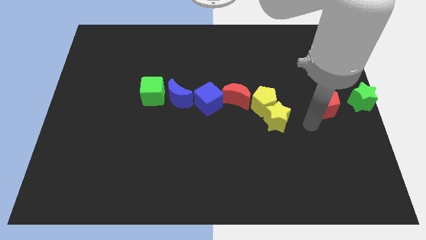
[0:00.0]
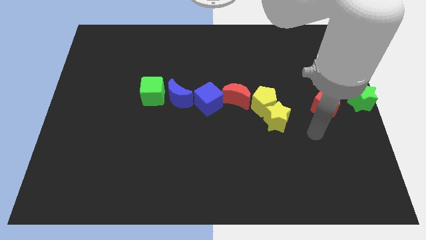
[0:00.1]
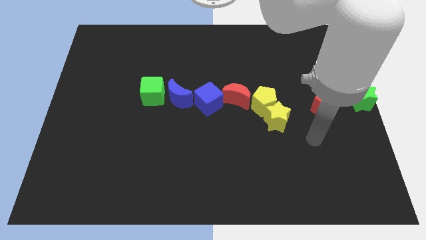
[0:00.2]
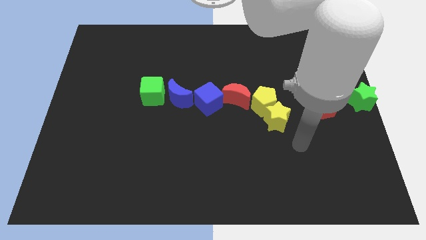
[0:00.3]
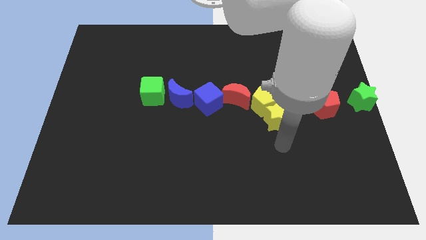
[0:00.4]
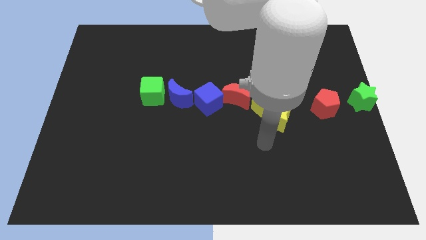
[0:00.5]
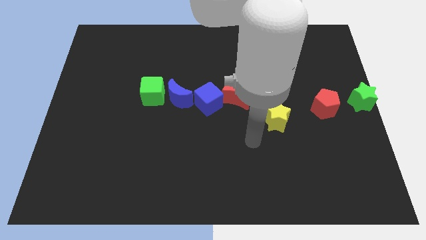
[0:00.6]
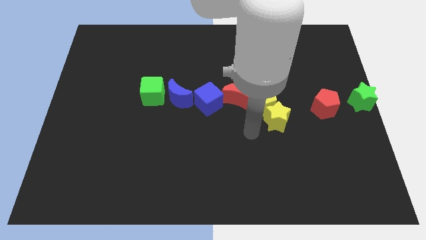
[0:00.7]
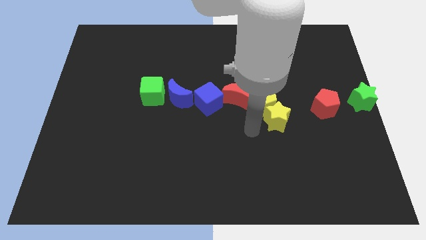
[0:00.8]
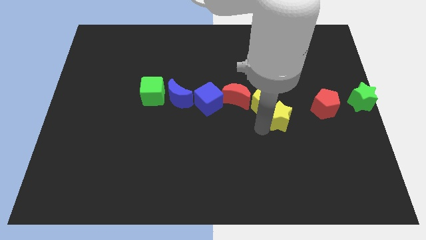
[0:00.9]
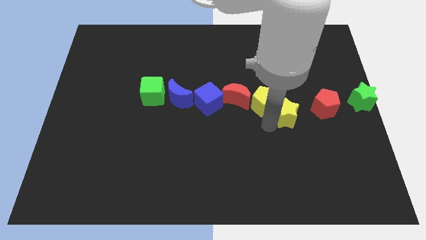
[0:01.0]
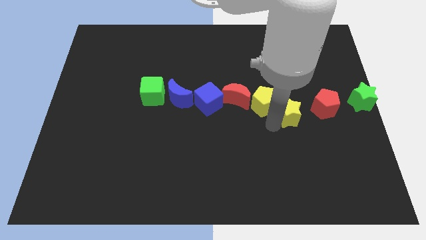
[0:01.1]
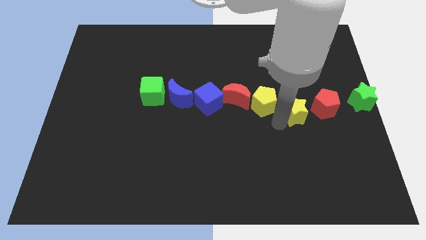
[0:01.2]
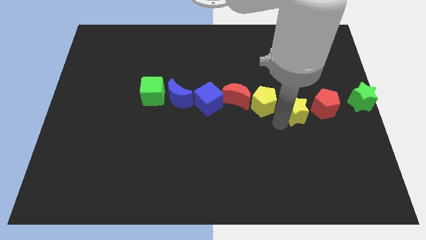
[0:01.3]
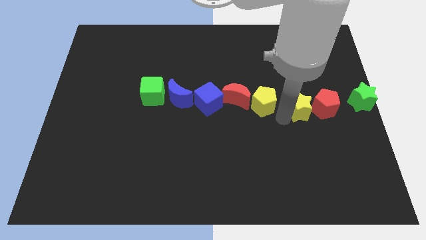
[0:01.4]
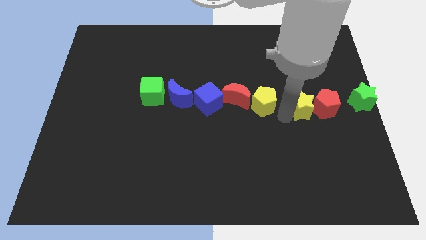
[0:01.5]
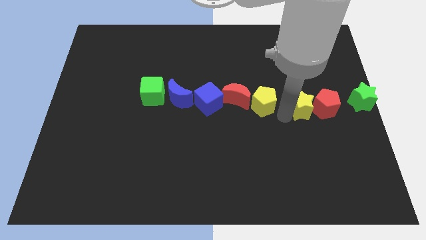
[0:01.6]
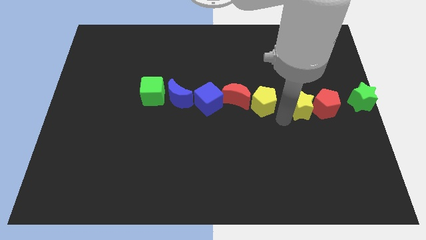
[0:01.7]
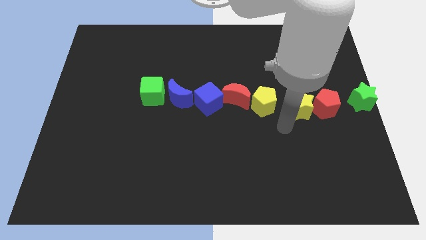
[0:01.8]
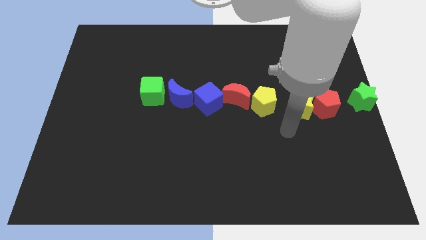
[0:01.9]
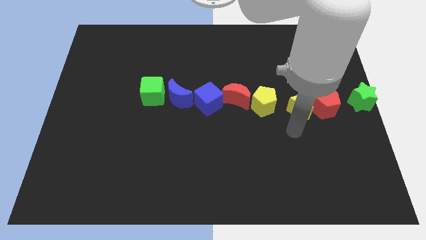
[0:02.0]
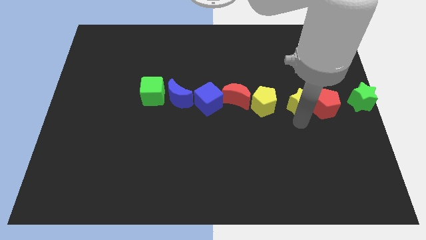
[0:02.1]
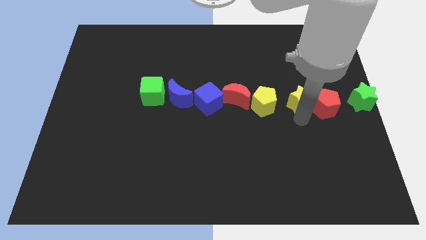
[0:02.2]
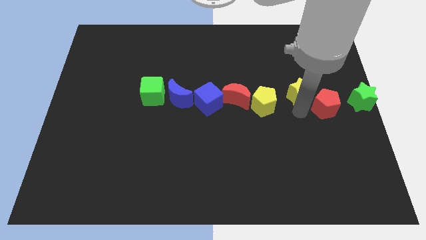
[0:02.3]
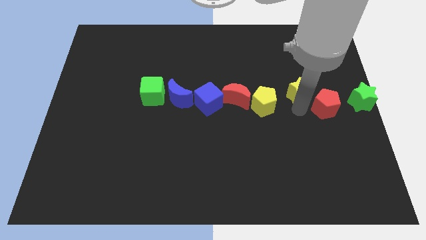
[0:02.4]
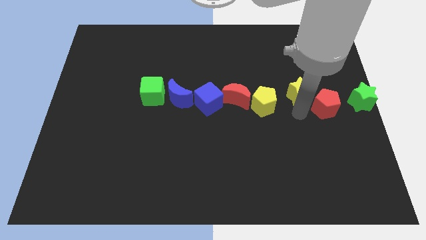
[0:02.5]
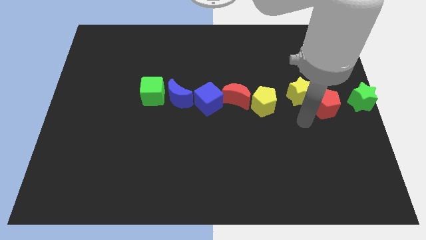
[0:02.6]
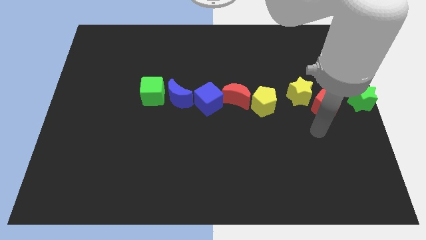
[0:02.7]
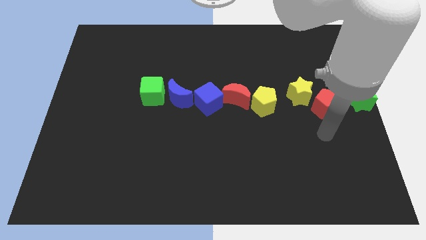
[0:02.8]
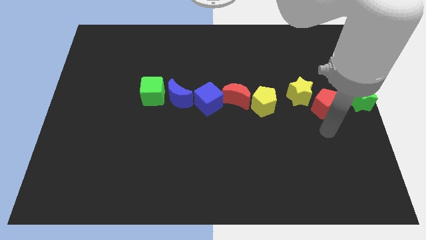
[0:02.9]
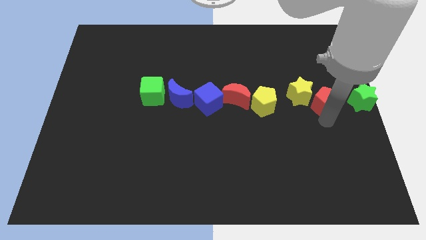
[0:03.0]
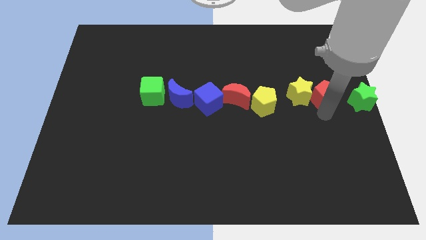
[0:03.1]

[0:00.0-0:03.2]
separate the yellow star from yellow pentagon

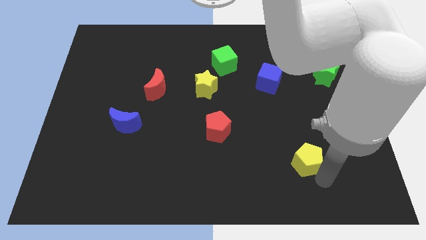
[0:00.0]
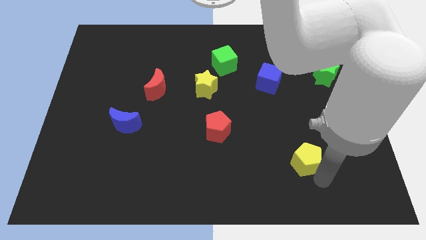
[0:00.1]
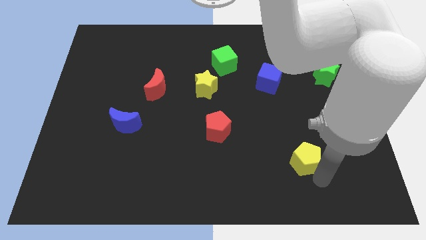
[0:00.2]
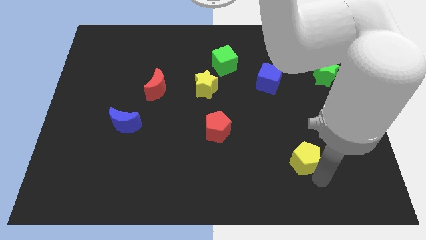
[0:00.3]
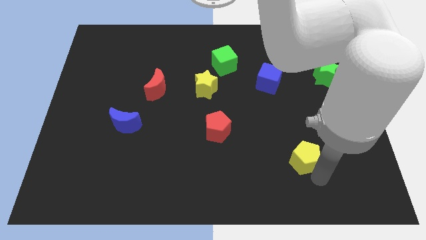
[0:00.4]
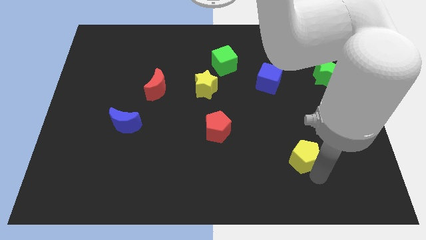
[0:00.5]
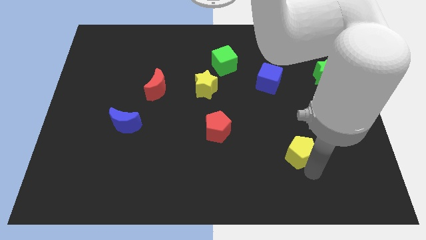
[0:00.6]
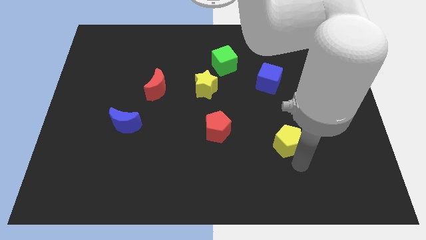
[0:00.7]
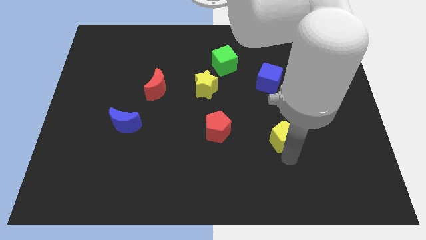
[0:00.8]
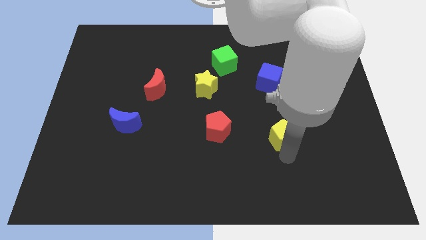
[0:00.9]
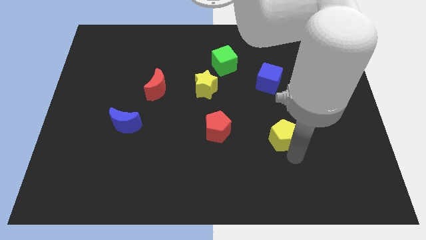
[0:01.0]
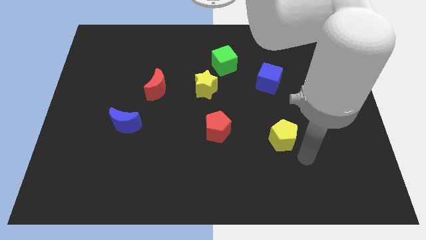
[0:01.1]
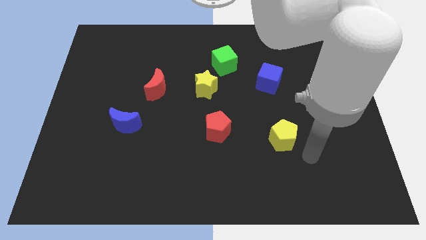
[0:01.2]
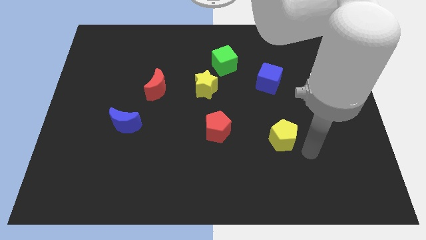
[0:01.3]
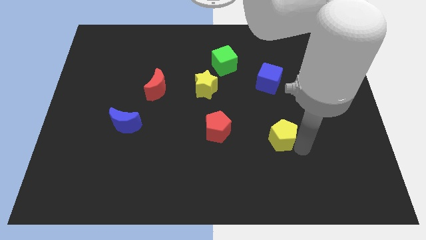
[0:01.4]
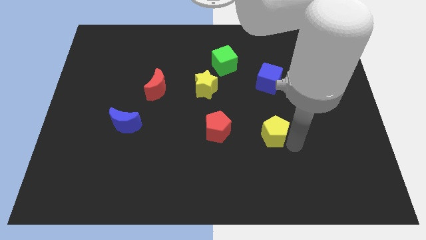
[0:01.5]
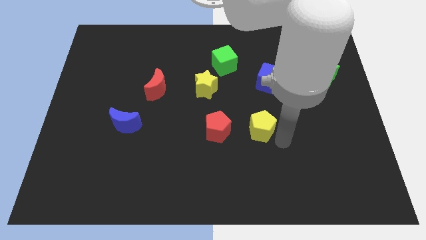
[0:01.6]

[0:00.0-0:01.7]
place the yellow pentagon horizontally to the red pentagon

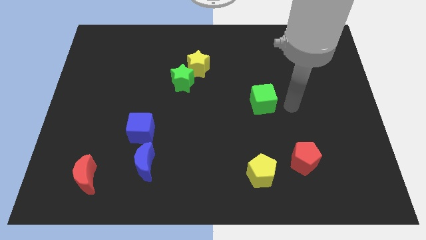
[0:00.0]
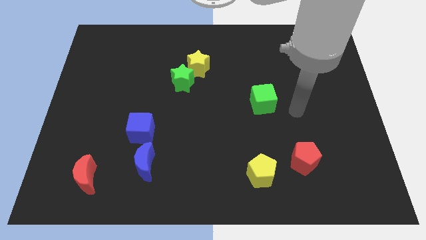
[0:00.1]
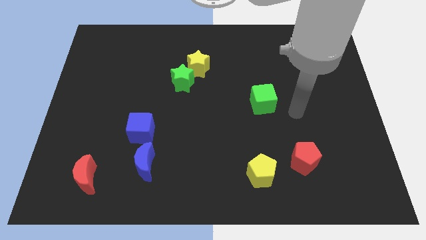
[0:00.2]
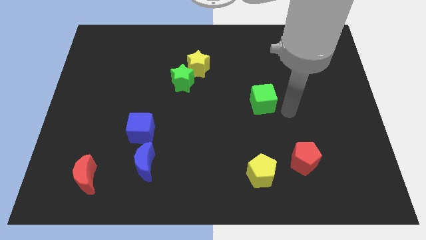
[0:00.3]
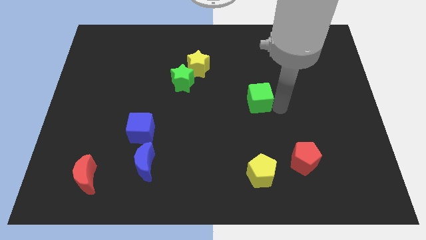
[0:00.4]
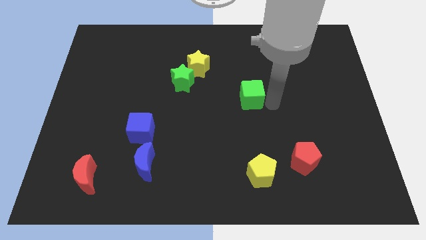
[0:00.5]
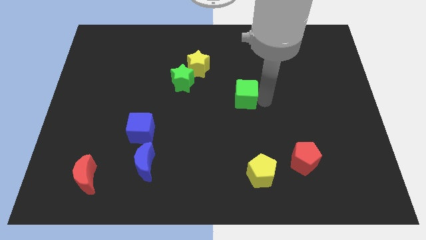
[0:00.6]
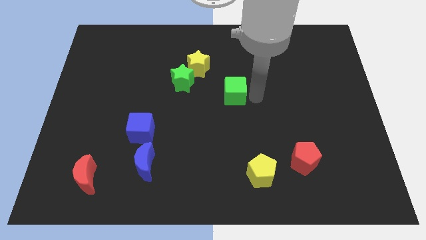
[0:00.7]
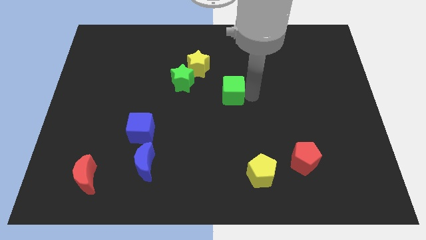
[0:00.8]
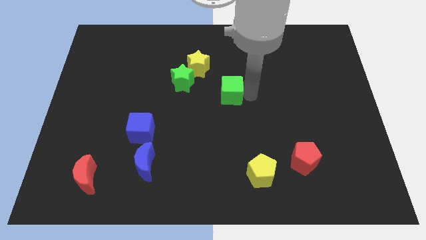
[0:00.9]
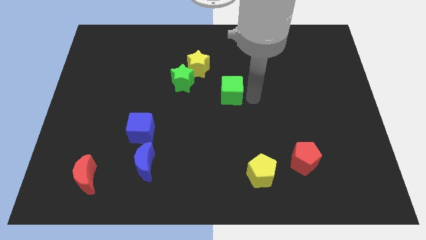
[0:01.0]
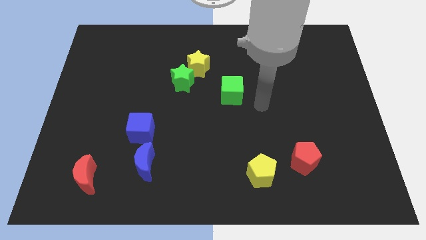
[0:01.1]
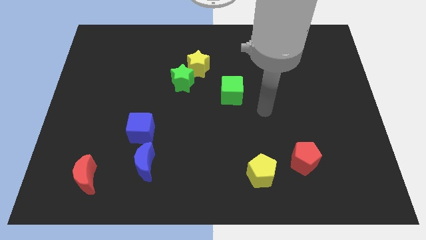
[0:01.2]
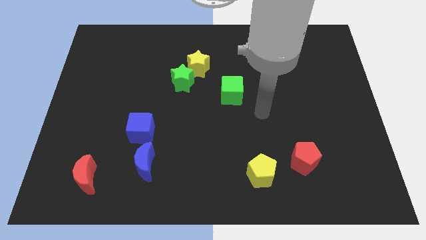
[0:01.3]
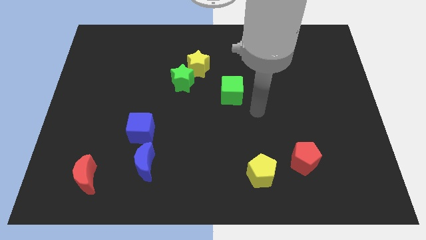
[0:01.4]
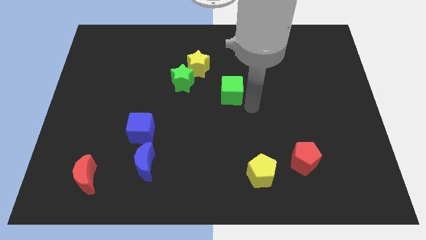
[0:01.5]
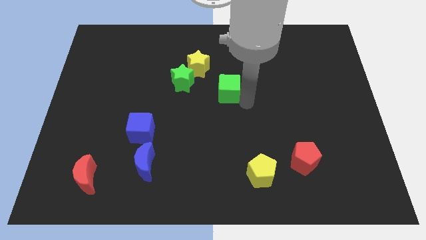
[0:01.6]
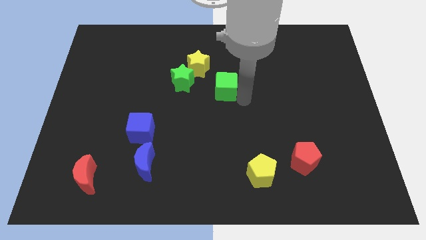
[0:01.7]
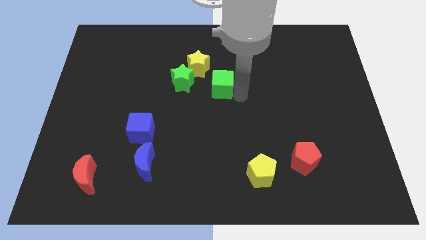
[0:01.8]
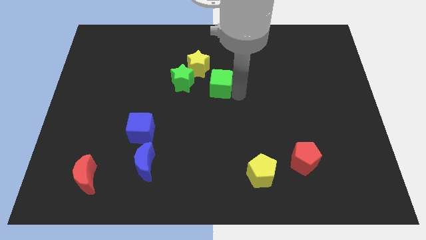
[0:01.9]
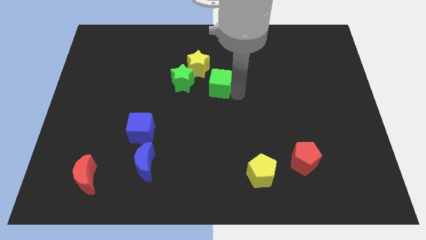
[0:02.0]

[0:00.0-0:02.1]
place green cube to right of green star

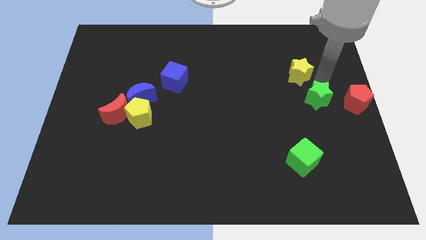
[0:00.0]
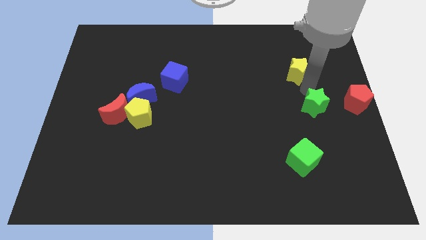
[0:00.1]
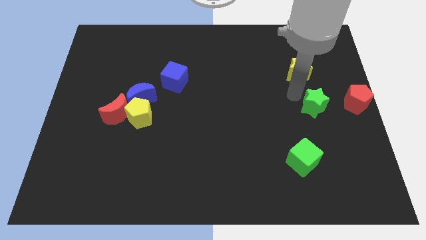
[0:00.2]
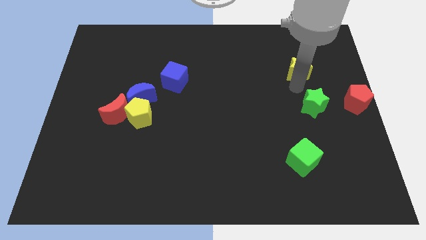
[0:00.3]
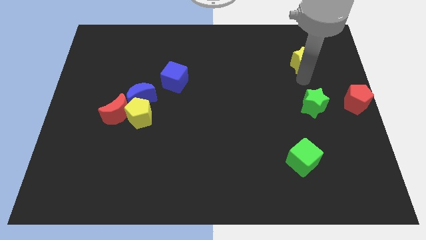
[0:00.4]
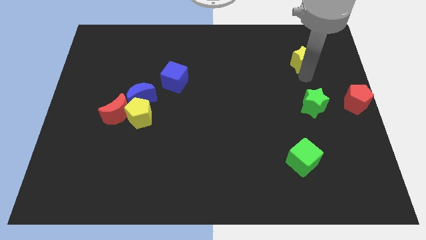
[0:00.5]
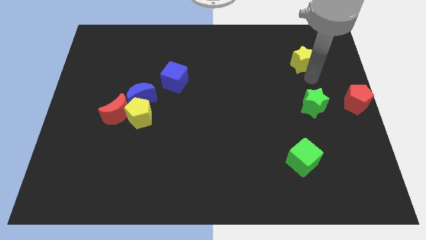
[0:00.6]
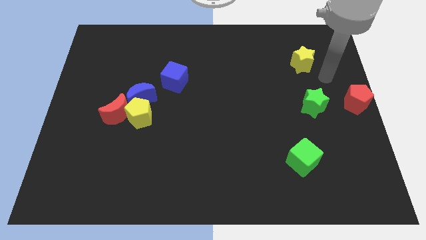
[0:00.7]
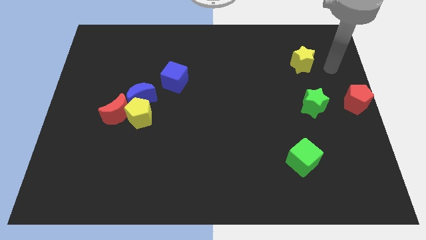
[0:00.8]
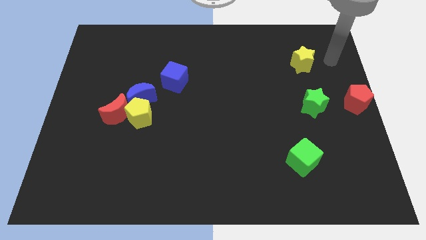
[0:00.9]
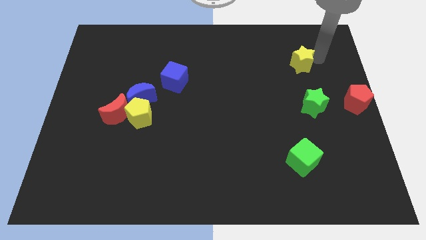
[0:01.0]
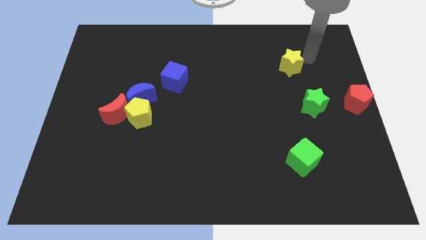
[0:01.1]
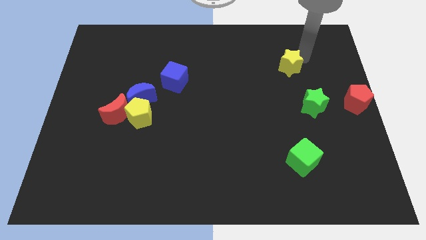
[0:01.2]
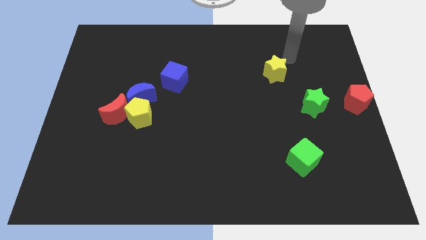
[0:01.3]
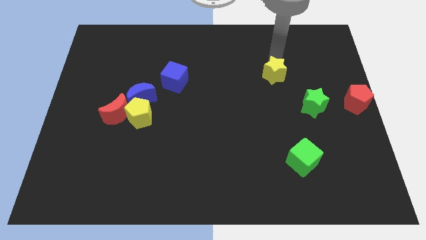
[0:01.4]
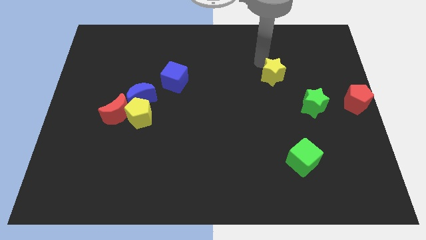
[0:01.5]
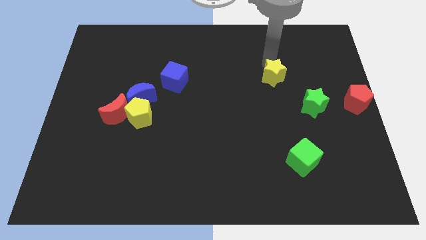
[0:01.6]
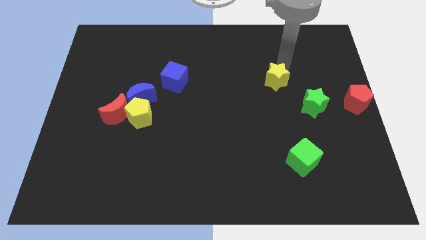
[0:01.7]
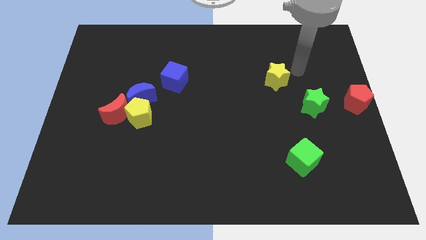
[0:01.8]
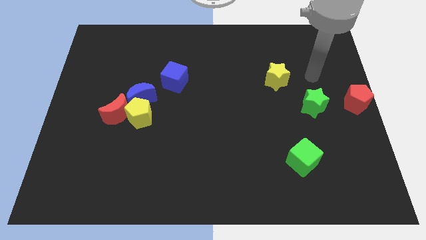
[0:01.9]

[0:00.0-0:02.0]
place yellow star diagonally towards green star
